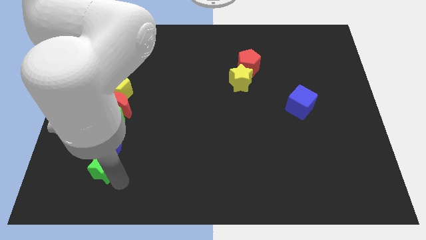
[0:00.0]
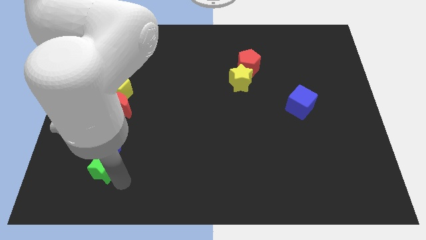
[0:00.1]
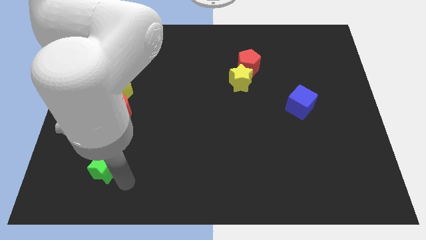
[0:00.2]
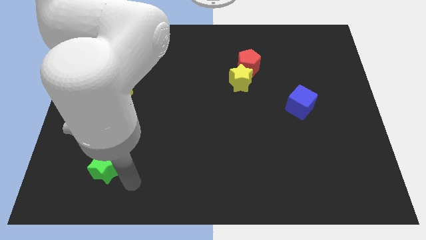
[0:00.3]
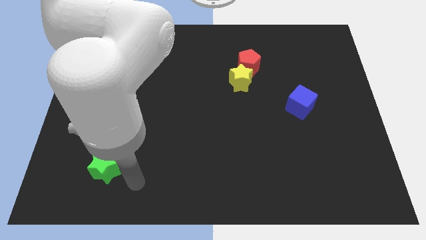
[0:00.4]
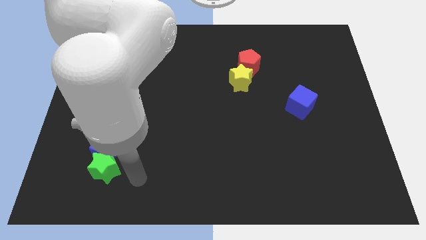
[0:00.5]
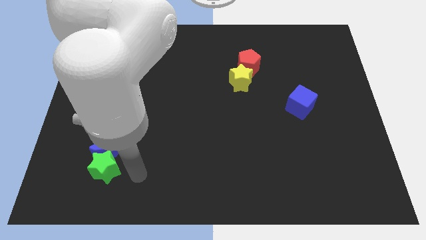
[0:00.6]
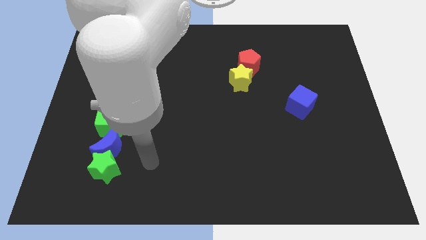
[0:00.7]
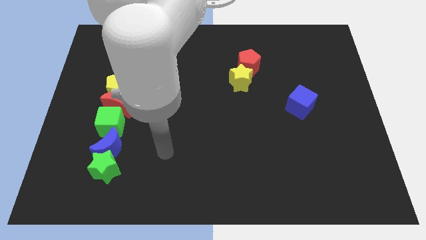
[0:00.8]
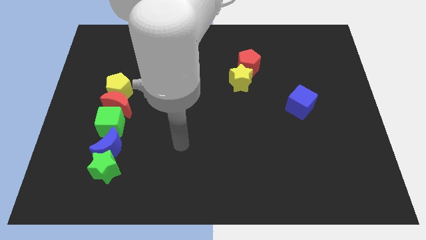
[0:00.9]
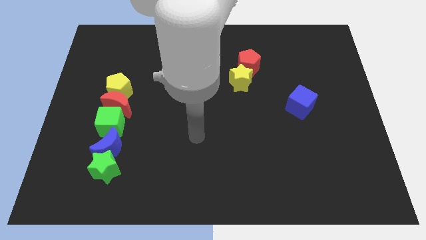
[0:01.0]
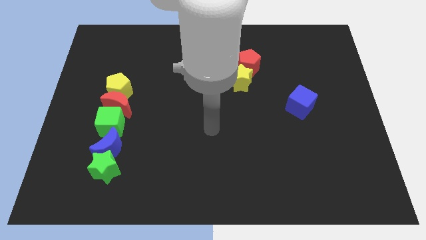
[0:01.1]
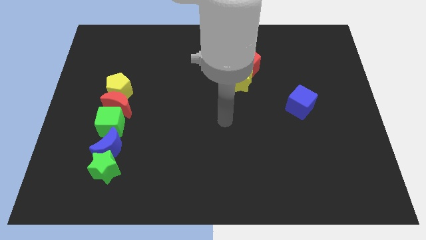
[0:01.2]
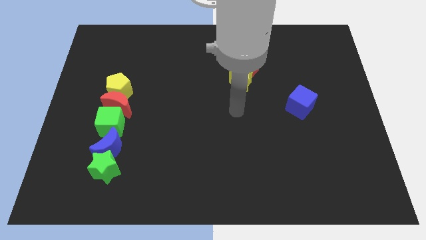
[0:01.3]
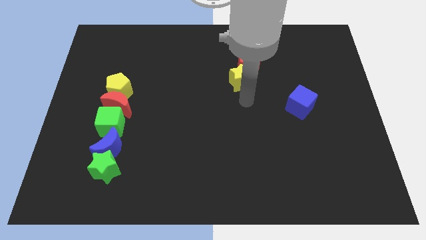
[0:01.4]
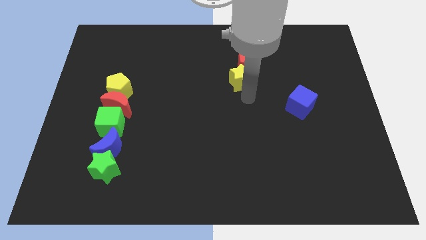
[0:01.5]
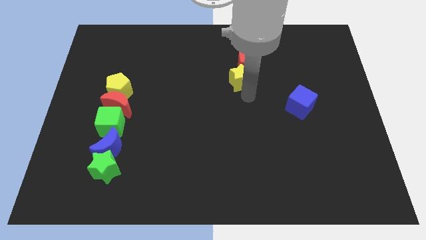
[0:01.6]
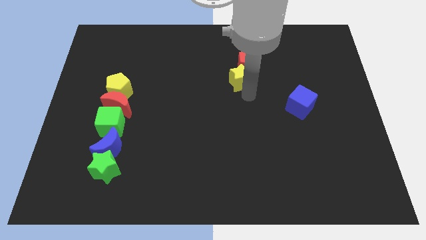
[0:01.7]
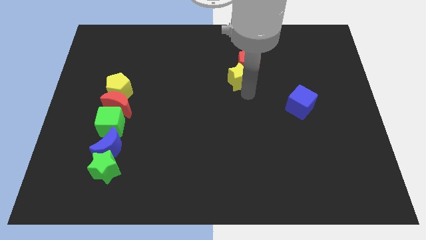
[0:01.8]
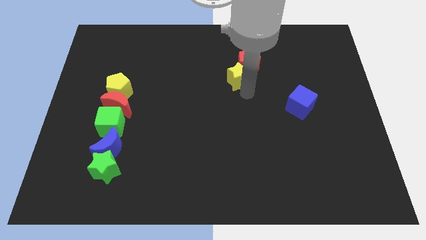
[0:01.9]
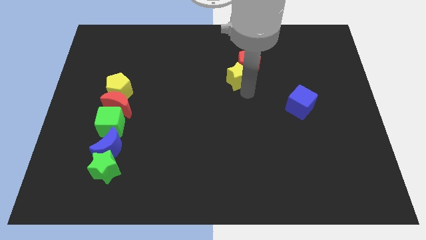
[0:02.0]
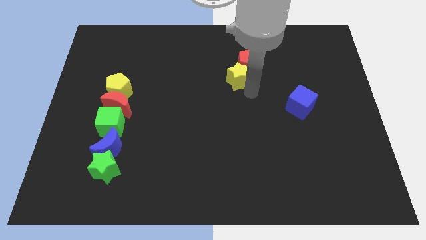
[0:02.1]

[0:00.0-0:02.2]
move the yellow star slightly up

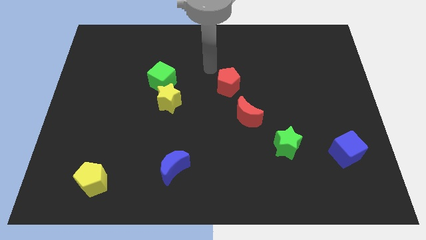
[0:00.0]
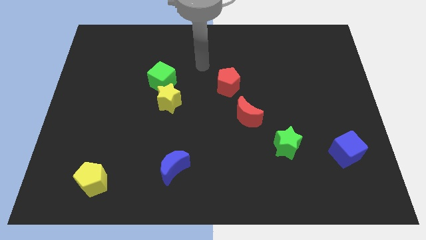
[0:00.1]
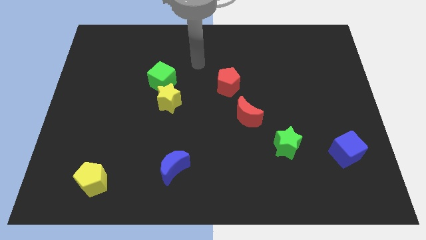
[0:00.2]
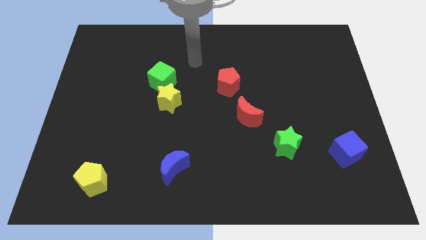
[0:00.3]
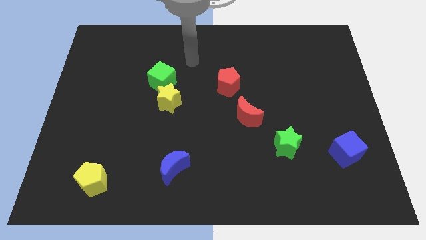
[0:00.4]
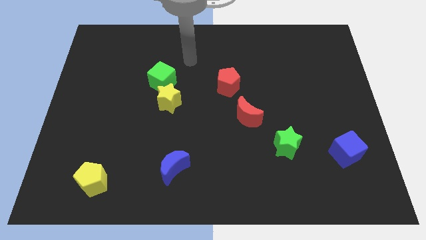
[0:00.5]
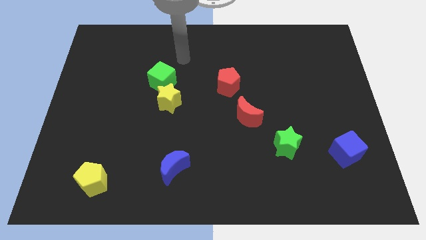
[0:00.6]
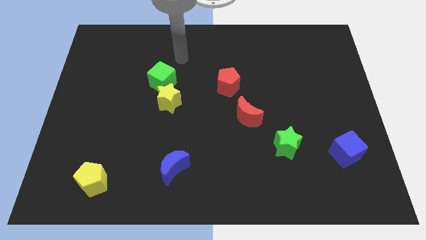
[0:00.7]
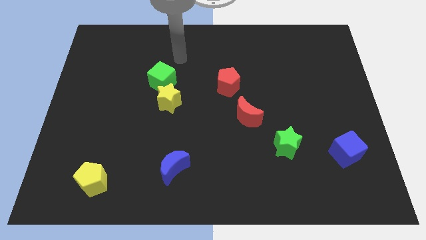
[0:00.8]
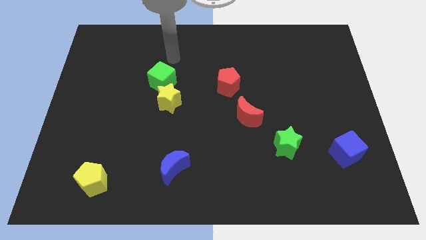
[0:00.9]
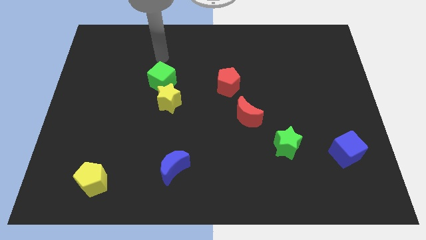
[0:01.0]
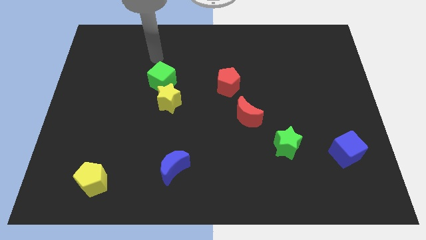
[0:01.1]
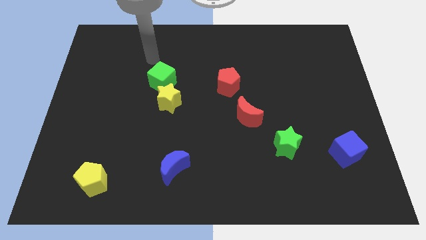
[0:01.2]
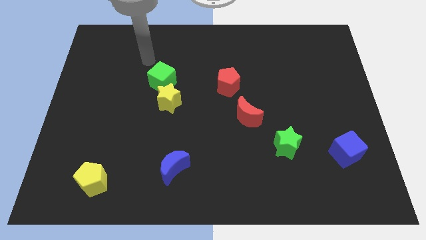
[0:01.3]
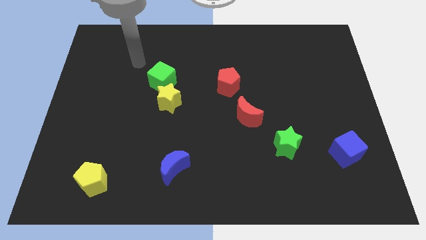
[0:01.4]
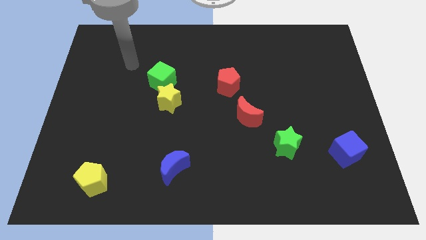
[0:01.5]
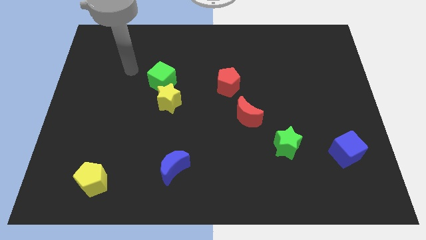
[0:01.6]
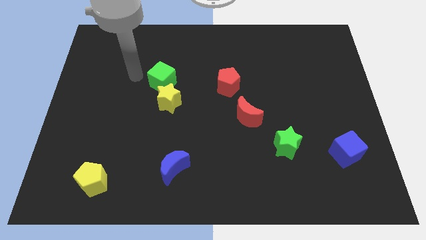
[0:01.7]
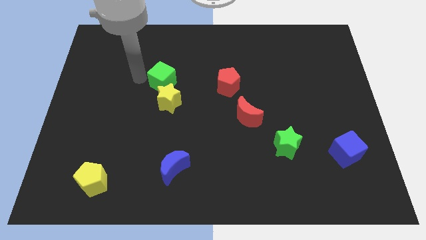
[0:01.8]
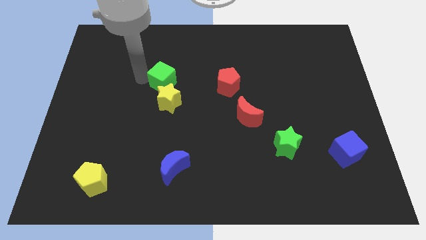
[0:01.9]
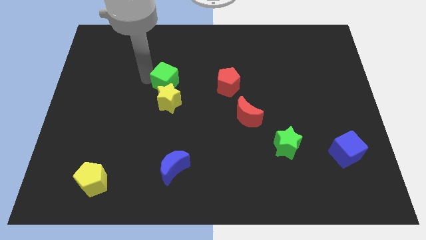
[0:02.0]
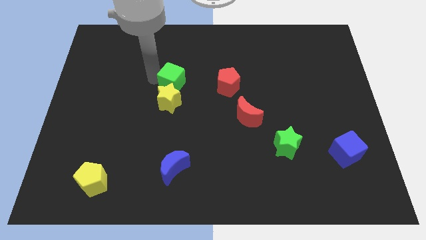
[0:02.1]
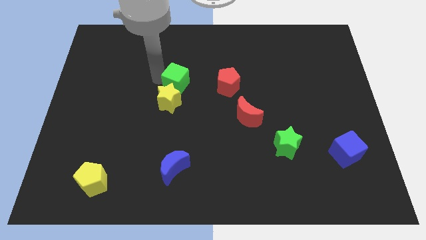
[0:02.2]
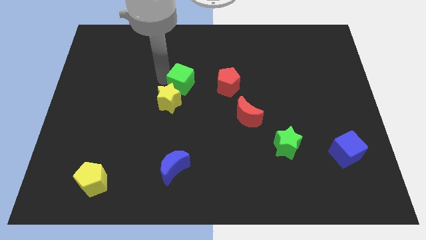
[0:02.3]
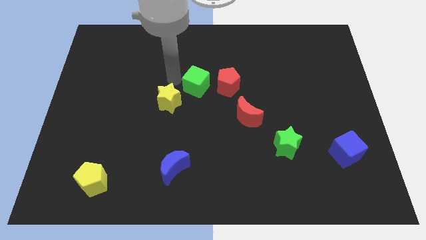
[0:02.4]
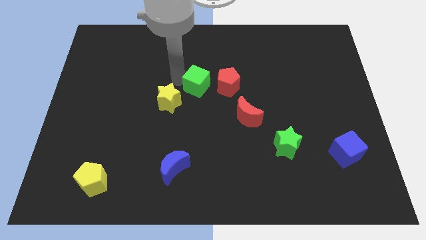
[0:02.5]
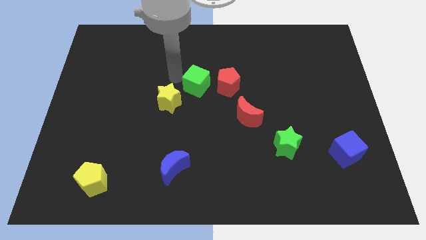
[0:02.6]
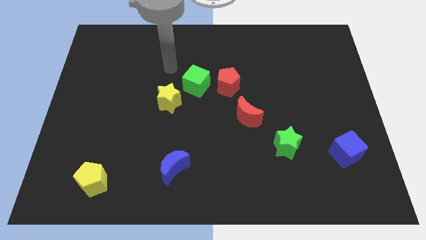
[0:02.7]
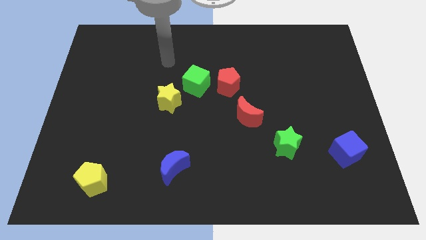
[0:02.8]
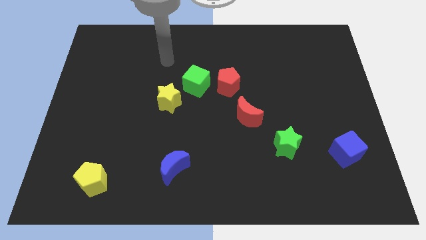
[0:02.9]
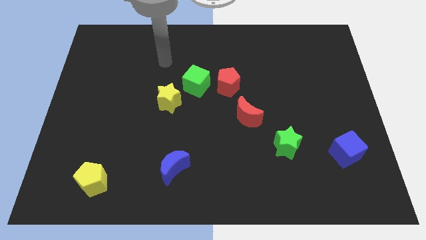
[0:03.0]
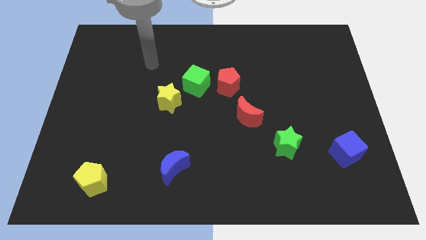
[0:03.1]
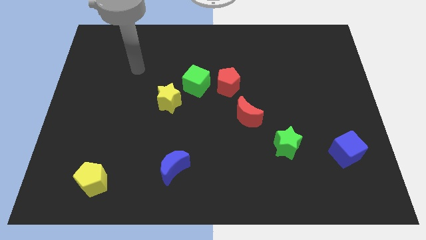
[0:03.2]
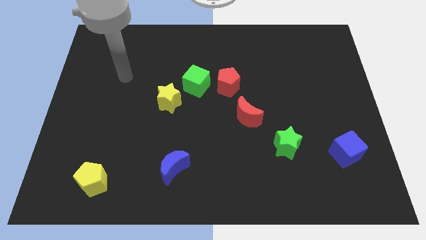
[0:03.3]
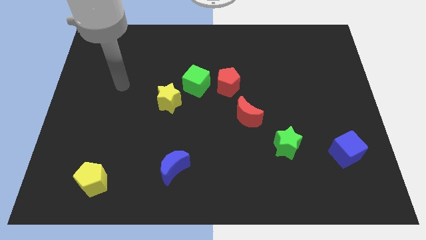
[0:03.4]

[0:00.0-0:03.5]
place green cube to the left of the red pentagon

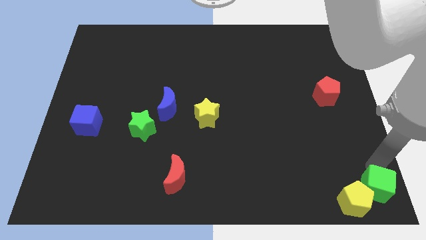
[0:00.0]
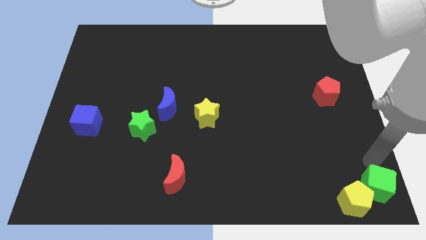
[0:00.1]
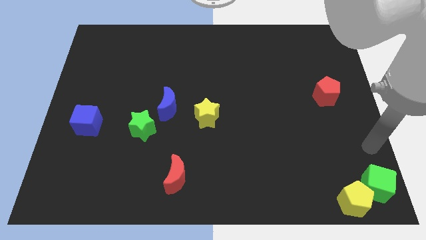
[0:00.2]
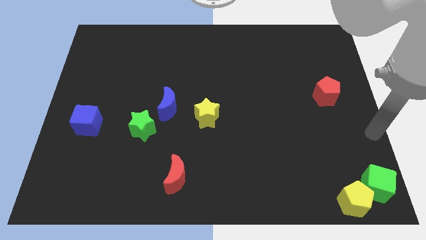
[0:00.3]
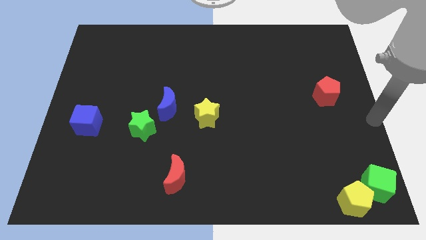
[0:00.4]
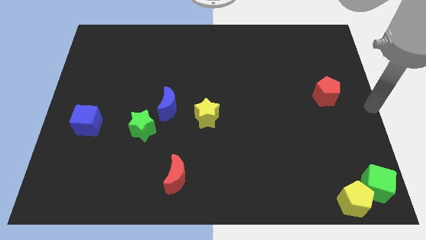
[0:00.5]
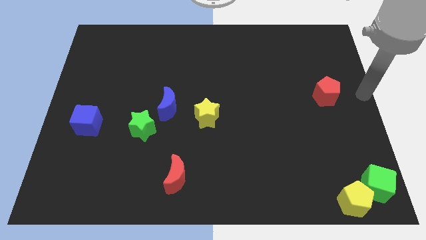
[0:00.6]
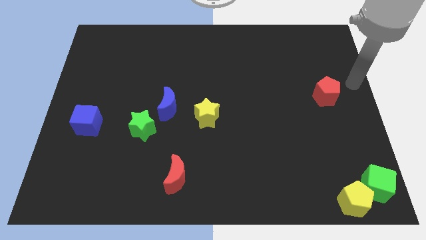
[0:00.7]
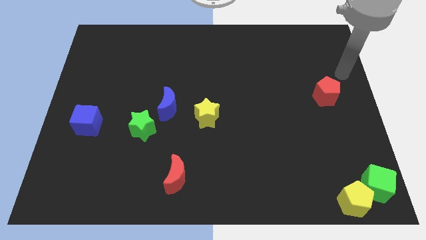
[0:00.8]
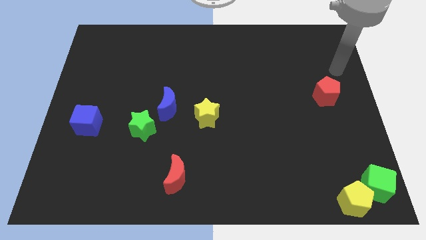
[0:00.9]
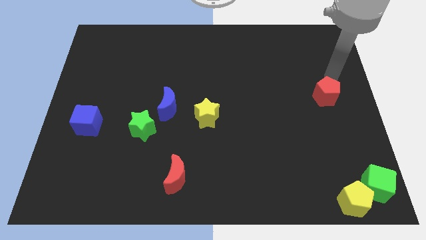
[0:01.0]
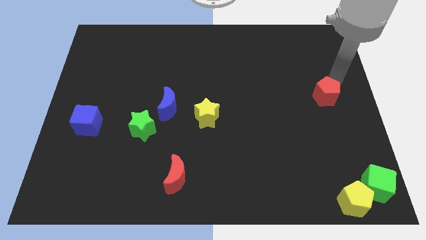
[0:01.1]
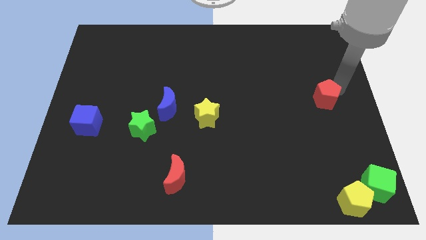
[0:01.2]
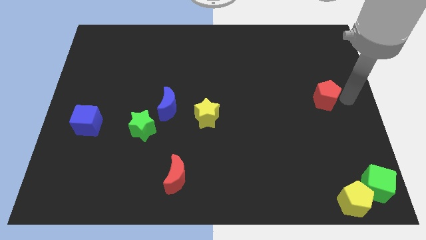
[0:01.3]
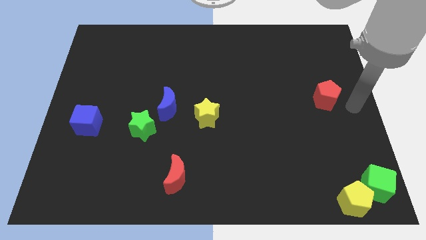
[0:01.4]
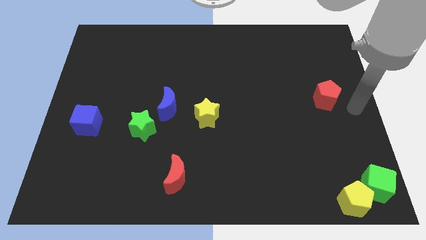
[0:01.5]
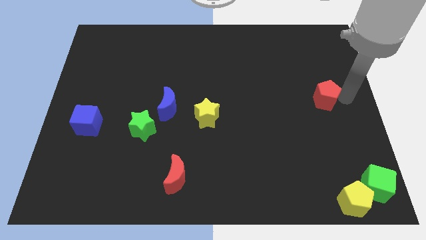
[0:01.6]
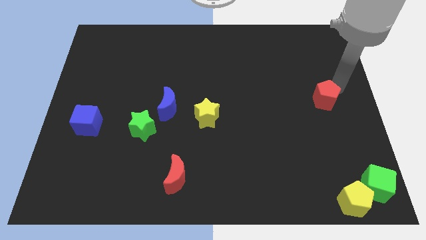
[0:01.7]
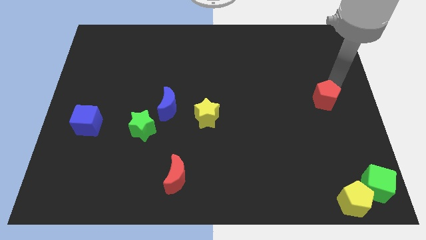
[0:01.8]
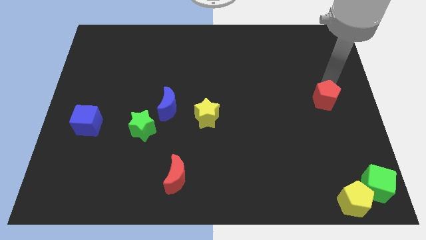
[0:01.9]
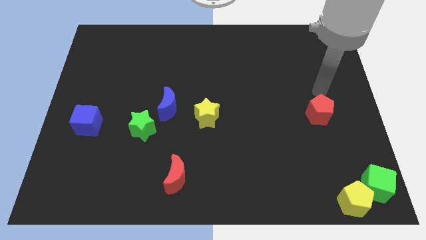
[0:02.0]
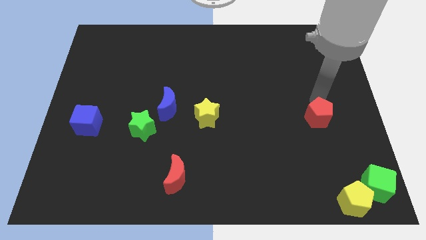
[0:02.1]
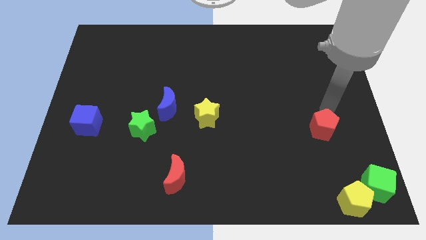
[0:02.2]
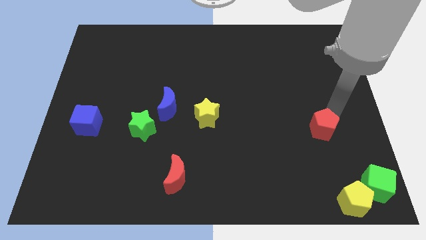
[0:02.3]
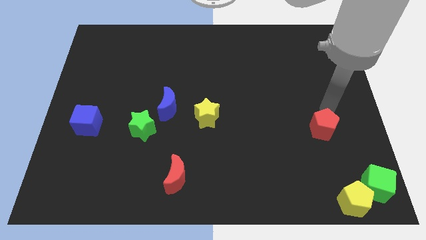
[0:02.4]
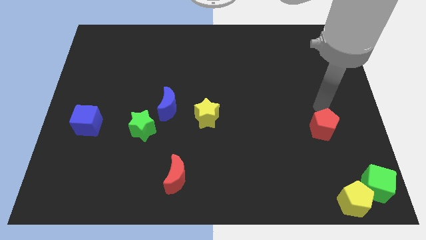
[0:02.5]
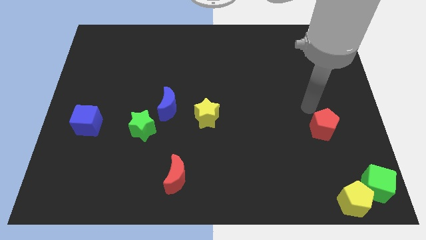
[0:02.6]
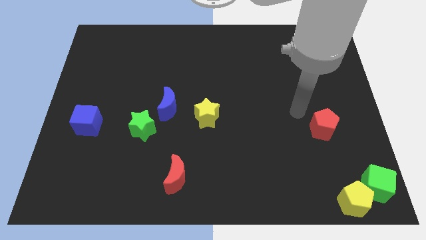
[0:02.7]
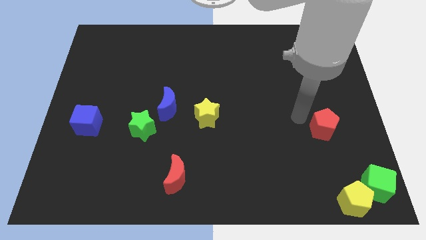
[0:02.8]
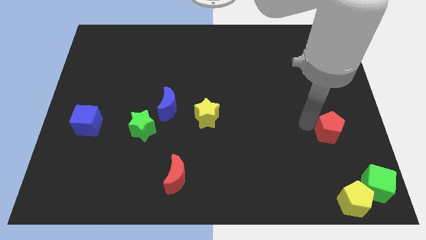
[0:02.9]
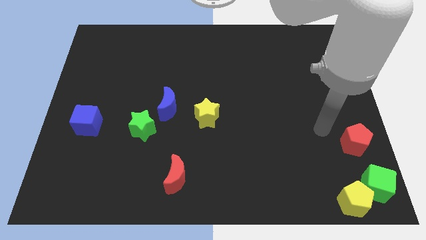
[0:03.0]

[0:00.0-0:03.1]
move the red pentagon slightly down

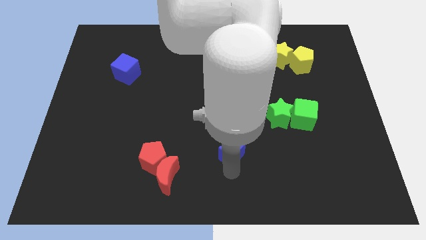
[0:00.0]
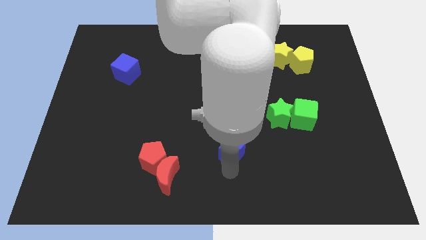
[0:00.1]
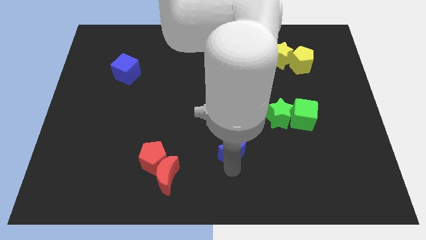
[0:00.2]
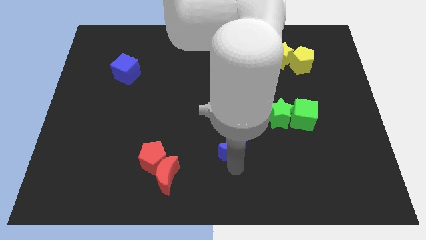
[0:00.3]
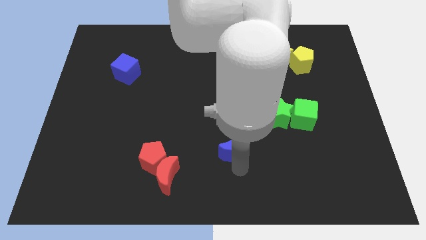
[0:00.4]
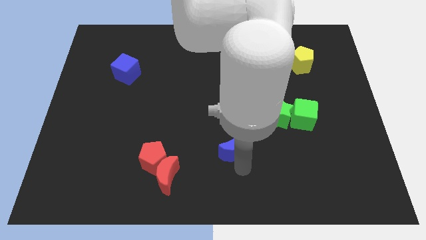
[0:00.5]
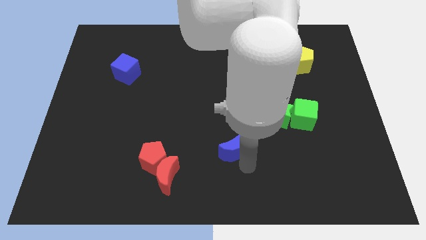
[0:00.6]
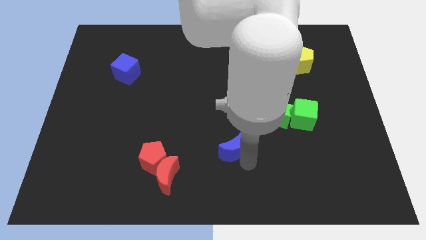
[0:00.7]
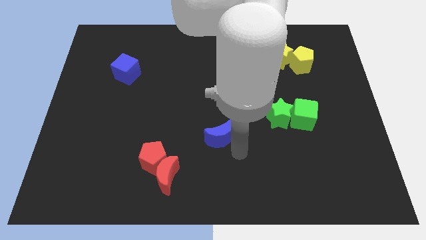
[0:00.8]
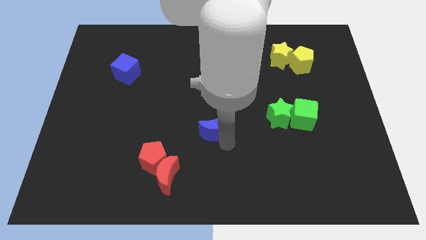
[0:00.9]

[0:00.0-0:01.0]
touch the bottom of blue crescent
